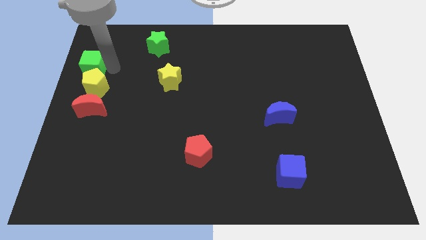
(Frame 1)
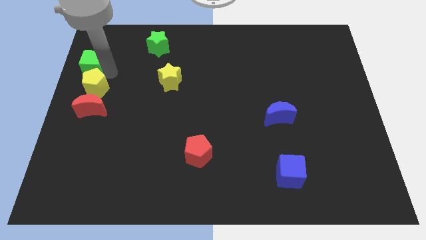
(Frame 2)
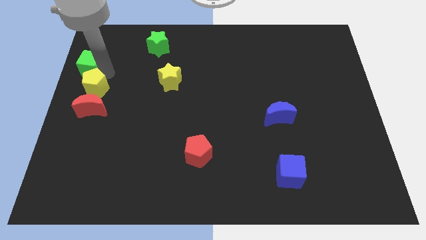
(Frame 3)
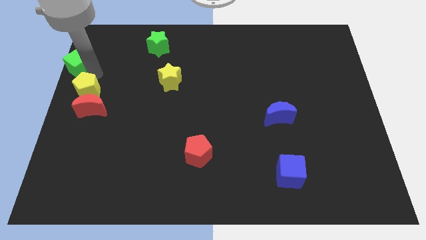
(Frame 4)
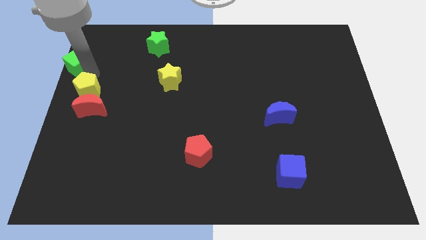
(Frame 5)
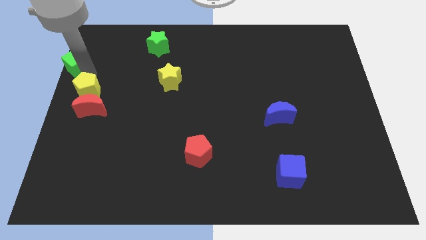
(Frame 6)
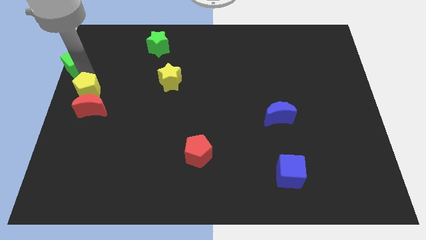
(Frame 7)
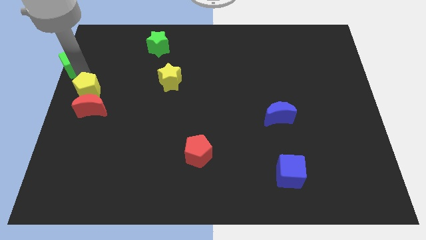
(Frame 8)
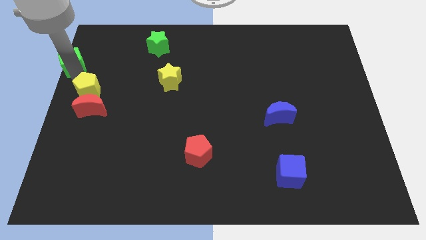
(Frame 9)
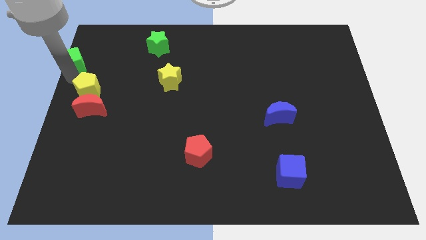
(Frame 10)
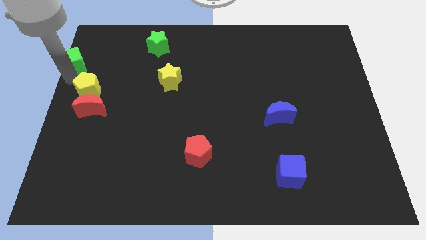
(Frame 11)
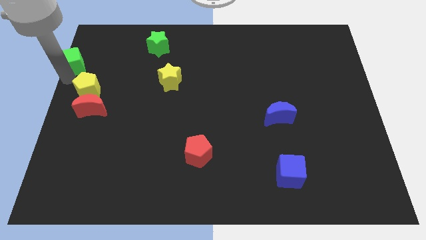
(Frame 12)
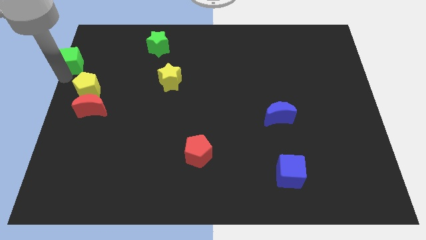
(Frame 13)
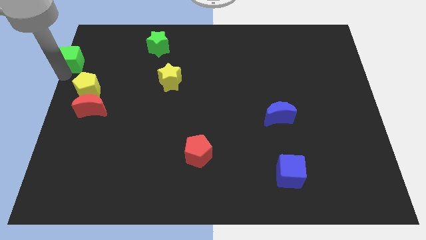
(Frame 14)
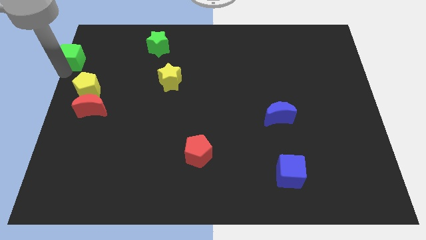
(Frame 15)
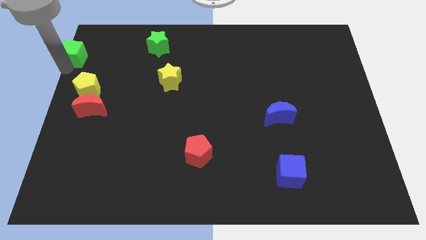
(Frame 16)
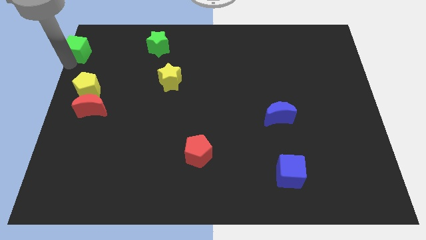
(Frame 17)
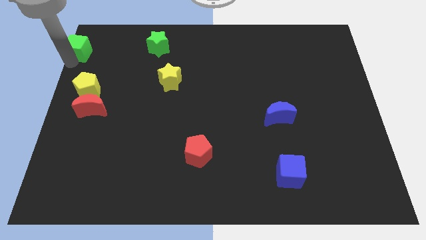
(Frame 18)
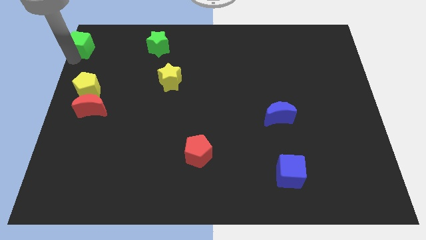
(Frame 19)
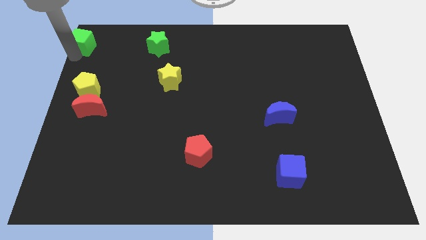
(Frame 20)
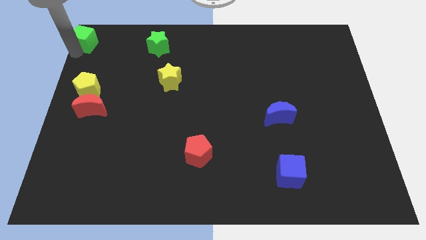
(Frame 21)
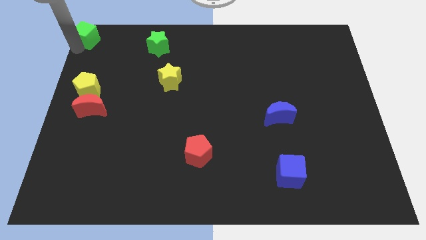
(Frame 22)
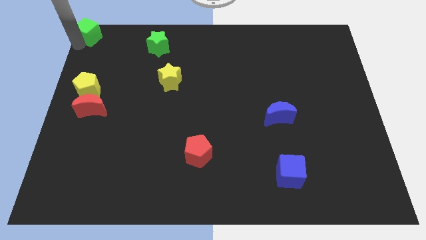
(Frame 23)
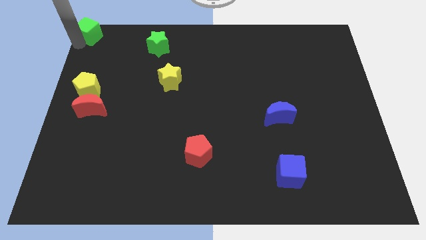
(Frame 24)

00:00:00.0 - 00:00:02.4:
drag the green cube to the top left corner of the board

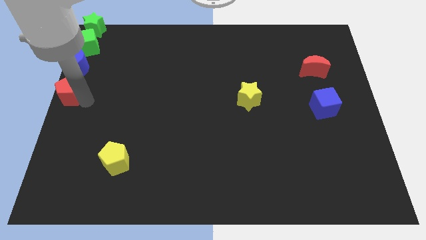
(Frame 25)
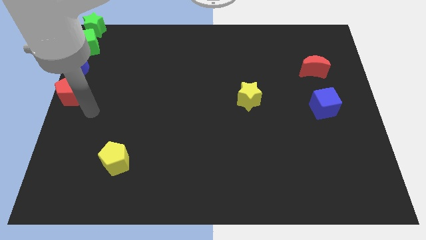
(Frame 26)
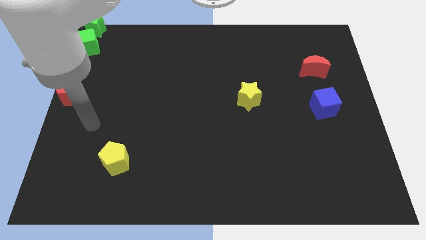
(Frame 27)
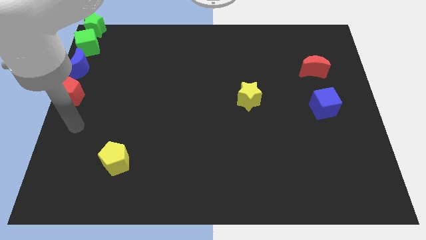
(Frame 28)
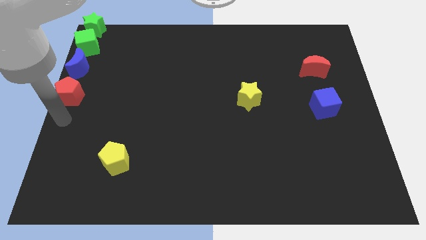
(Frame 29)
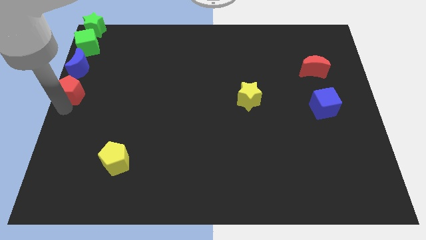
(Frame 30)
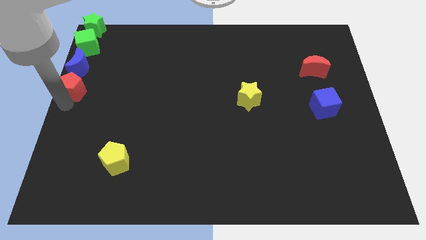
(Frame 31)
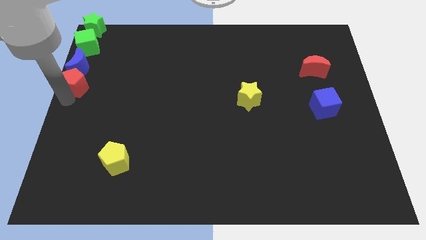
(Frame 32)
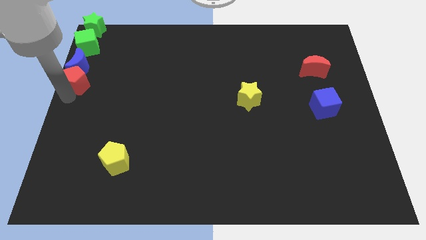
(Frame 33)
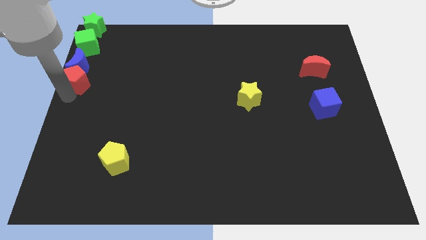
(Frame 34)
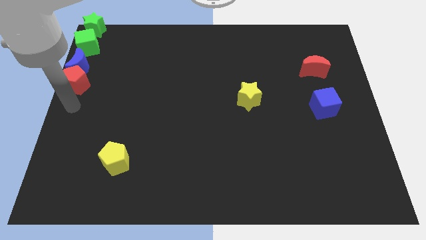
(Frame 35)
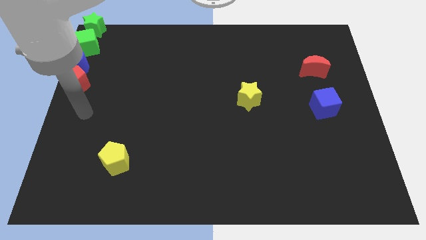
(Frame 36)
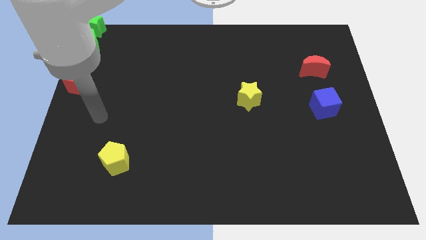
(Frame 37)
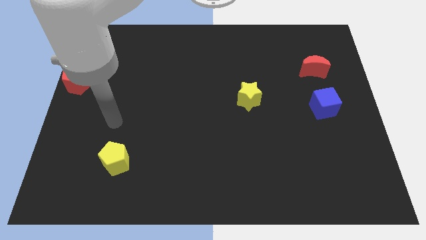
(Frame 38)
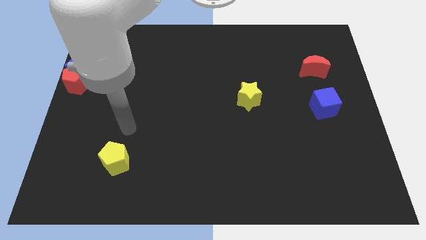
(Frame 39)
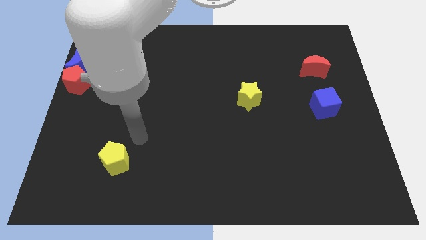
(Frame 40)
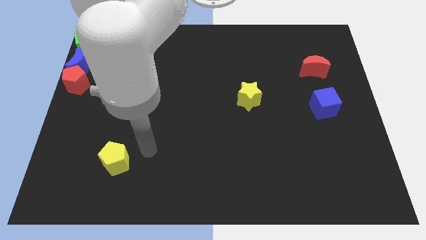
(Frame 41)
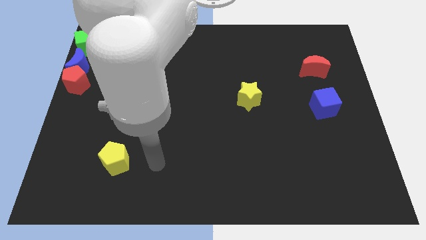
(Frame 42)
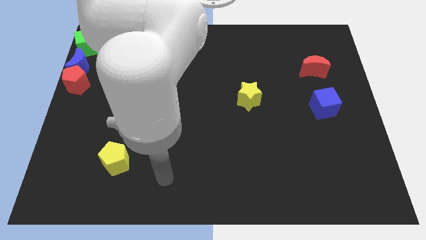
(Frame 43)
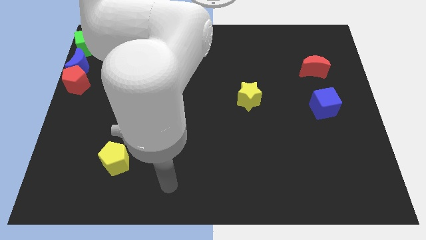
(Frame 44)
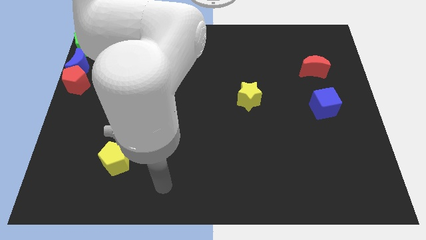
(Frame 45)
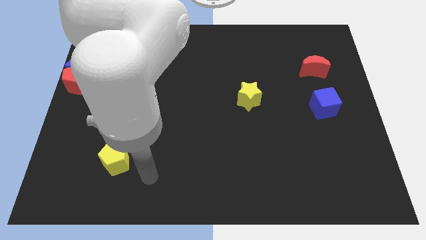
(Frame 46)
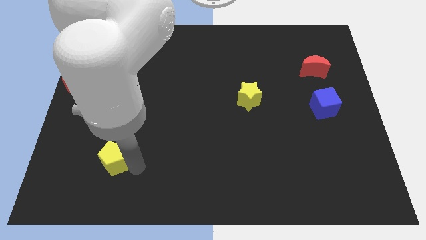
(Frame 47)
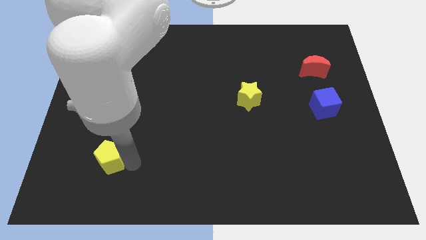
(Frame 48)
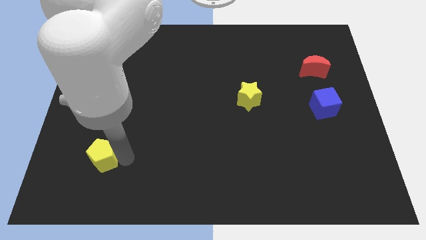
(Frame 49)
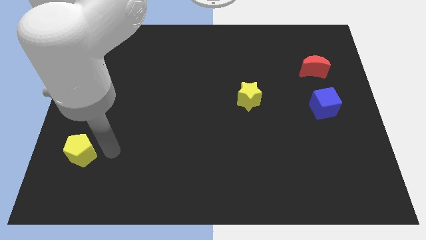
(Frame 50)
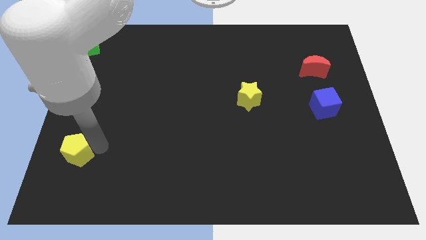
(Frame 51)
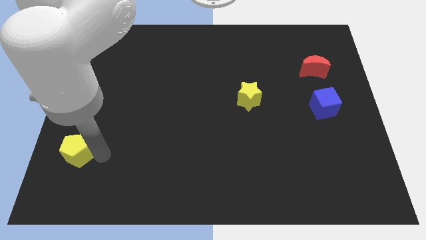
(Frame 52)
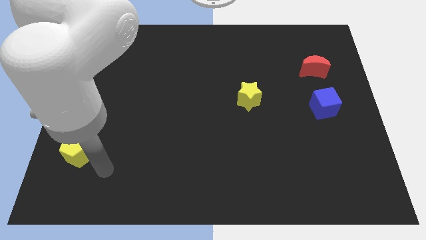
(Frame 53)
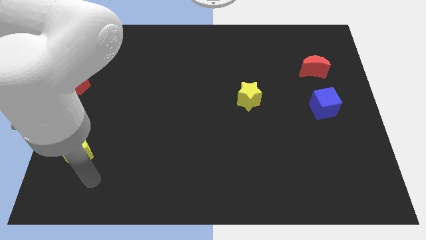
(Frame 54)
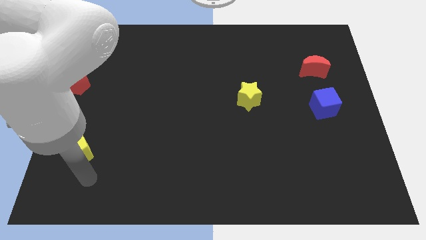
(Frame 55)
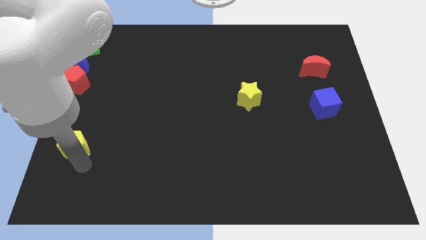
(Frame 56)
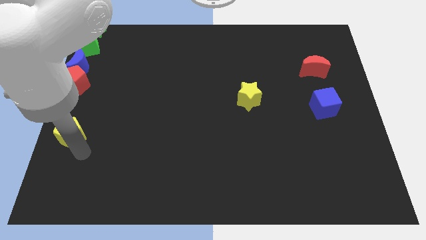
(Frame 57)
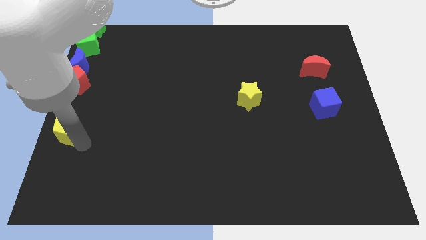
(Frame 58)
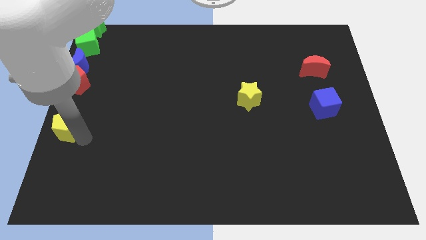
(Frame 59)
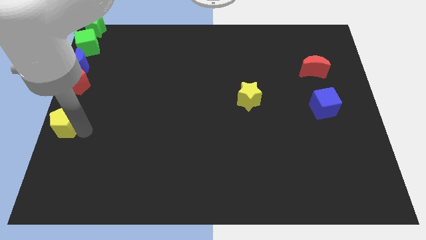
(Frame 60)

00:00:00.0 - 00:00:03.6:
place the yellow pentagon down to the red pentagon

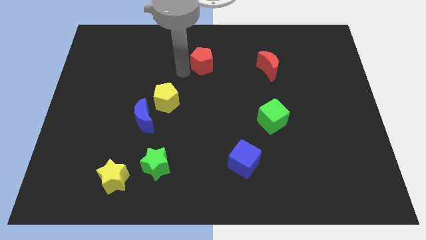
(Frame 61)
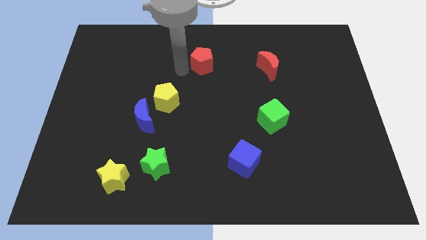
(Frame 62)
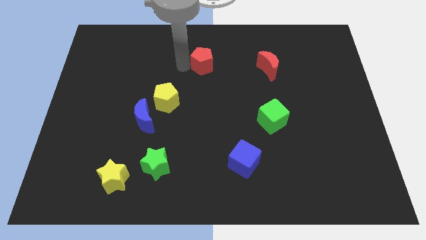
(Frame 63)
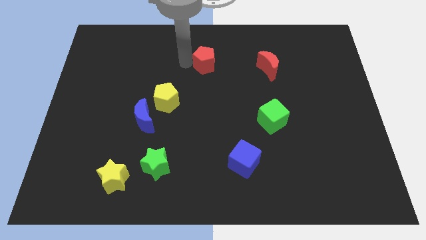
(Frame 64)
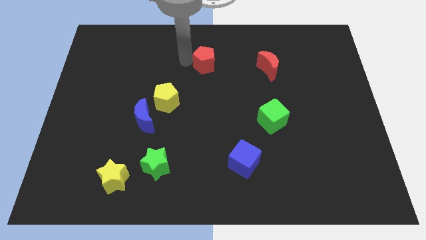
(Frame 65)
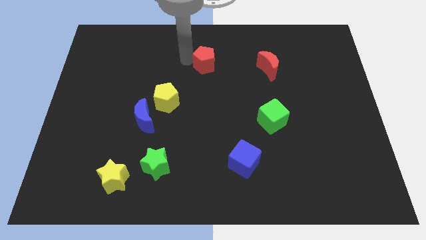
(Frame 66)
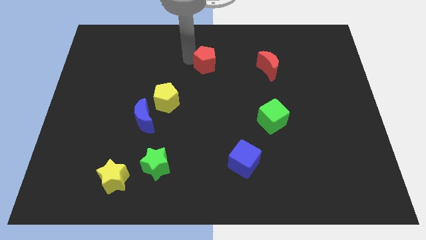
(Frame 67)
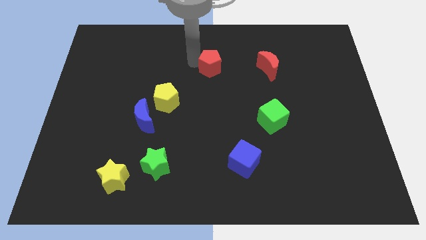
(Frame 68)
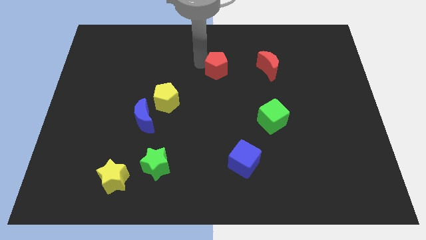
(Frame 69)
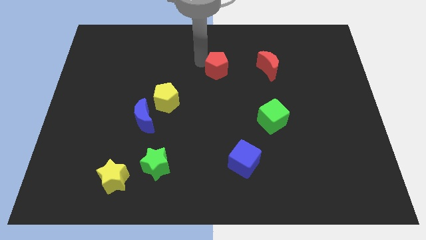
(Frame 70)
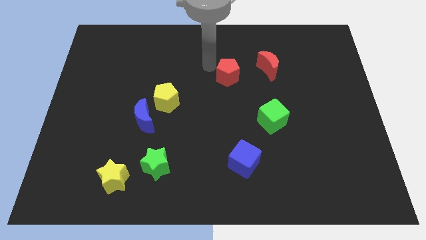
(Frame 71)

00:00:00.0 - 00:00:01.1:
push red pentagon towards red moon

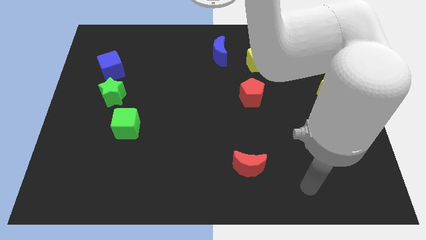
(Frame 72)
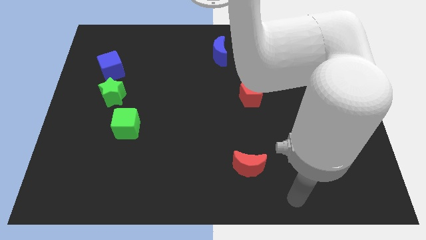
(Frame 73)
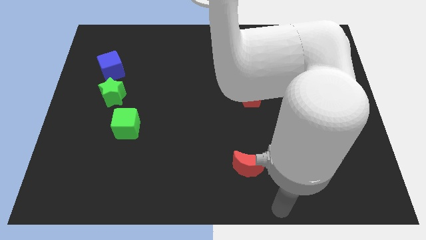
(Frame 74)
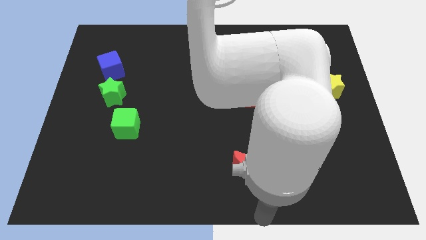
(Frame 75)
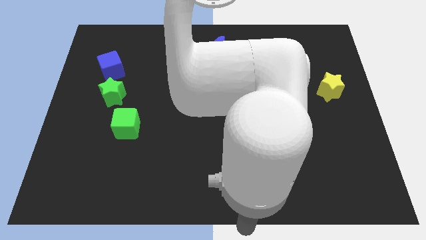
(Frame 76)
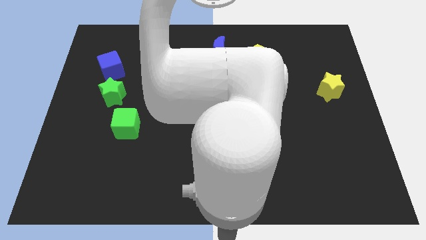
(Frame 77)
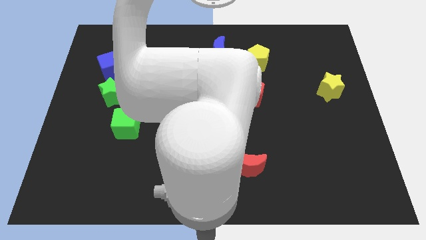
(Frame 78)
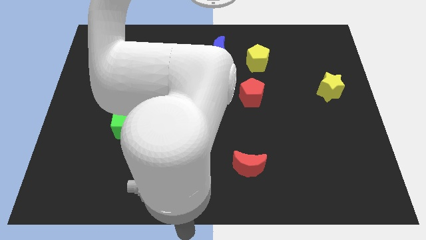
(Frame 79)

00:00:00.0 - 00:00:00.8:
place arm at bottom center

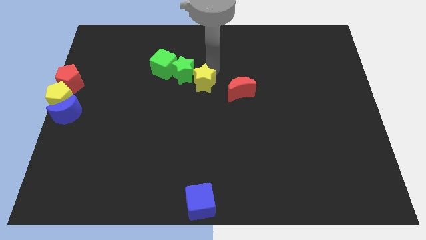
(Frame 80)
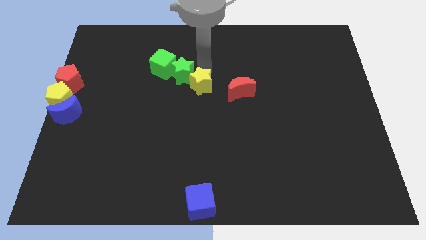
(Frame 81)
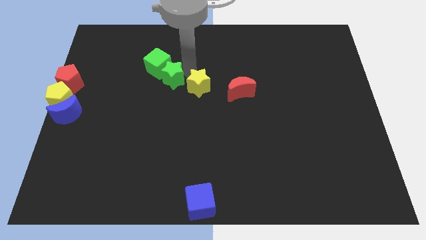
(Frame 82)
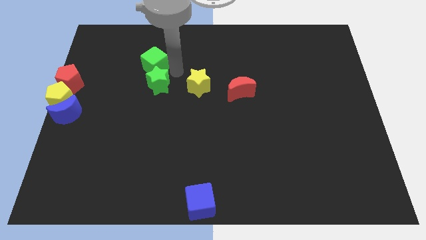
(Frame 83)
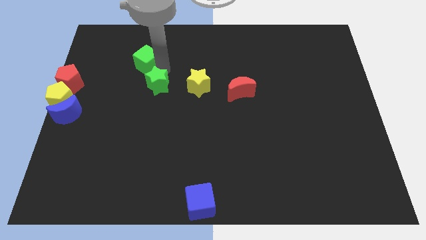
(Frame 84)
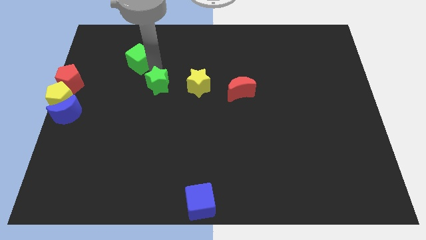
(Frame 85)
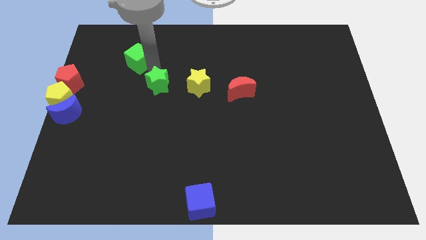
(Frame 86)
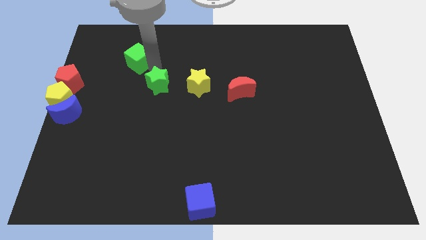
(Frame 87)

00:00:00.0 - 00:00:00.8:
place the green star left to the yellow star

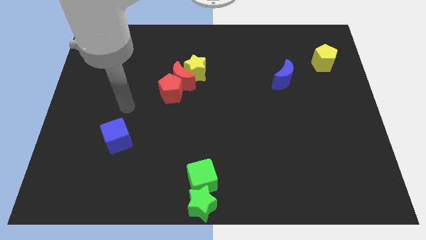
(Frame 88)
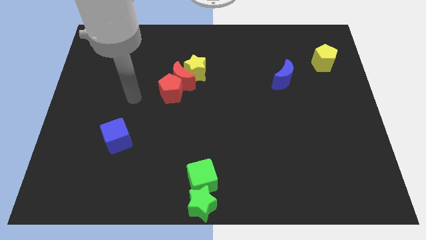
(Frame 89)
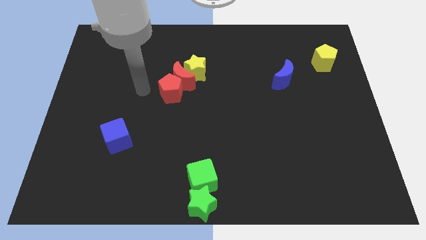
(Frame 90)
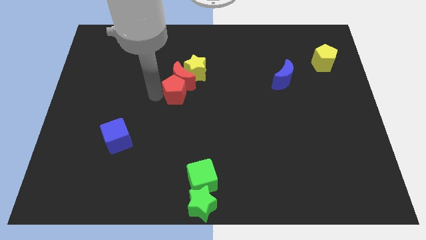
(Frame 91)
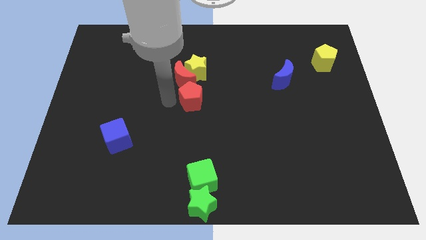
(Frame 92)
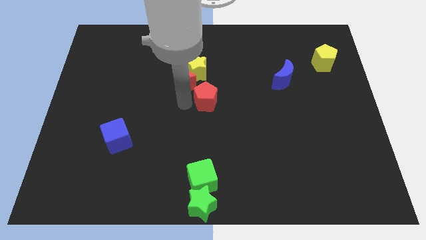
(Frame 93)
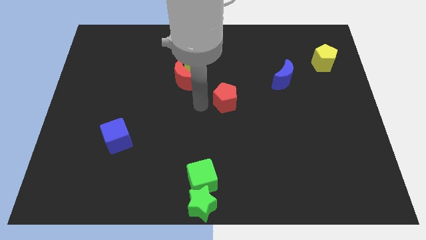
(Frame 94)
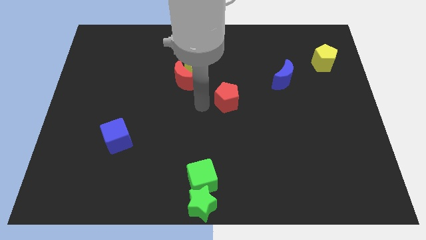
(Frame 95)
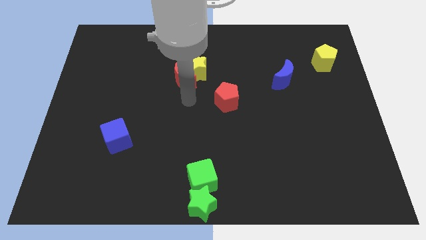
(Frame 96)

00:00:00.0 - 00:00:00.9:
push the red pentagon away from the red crescent
